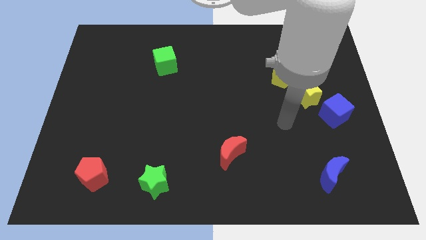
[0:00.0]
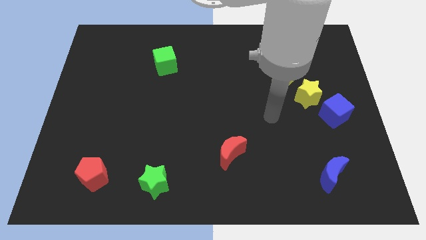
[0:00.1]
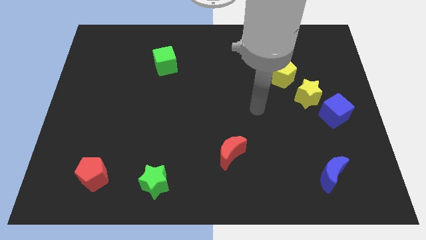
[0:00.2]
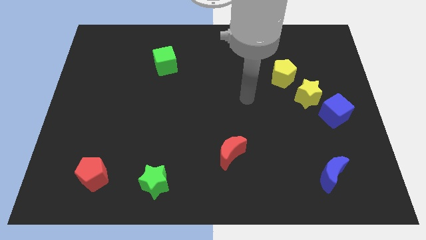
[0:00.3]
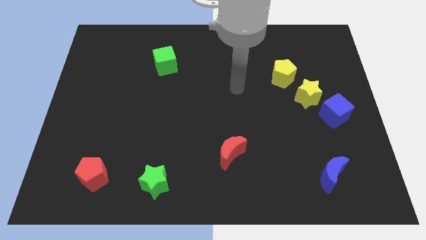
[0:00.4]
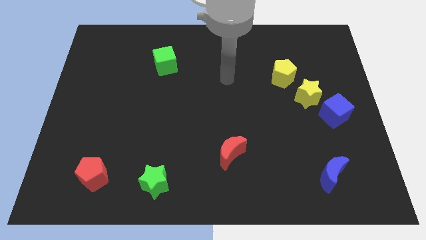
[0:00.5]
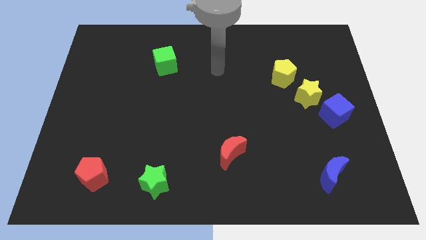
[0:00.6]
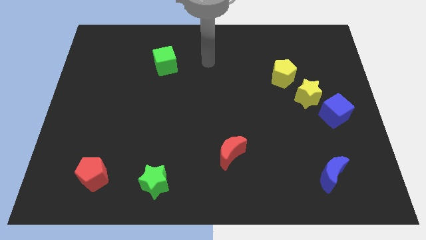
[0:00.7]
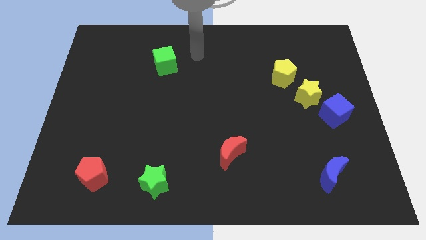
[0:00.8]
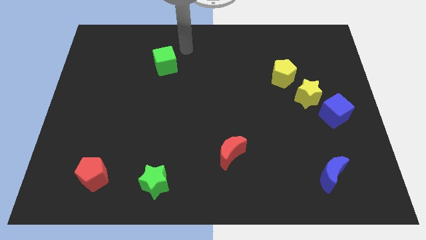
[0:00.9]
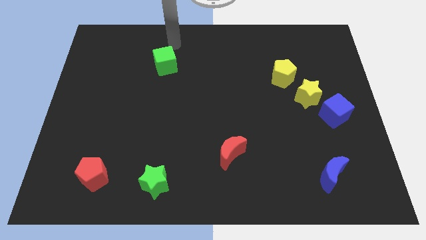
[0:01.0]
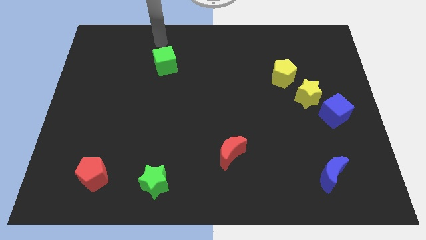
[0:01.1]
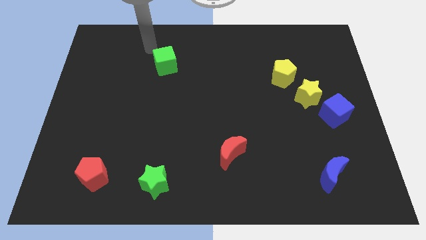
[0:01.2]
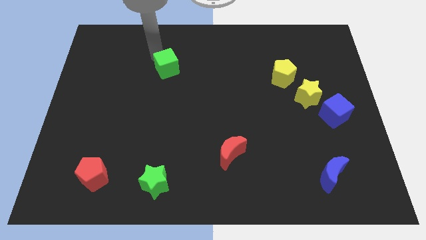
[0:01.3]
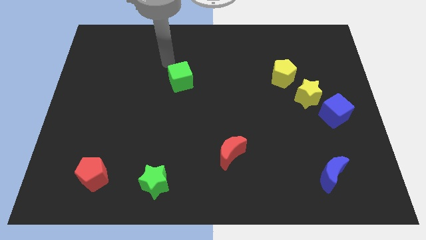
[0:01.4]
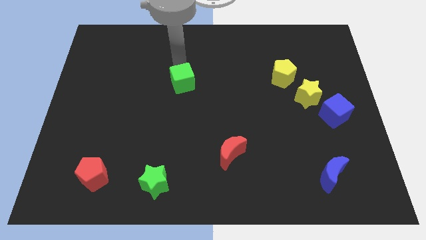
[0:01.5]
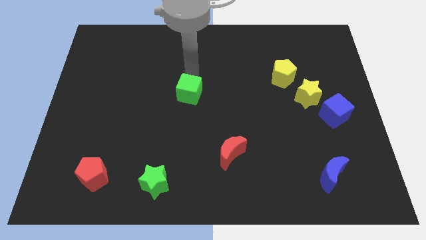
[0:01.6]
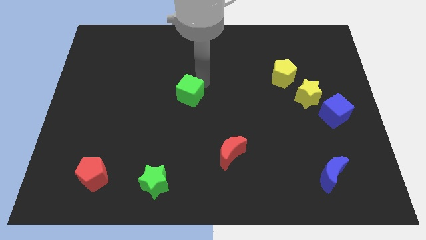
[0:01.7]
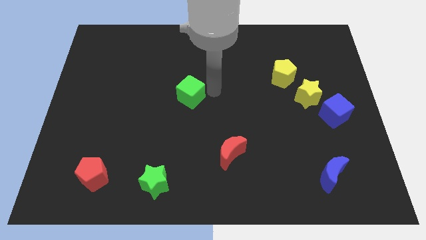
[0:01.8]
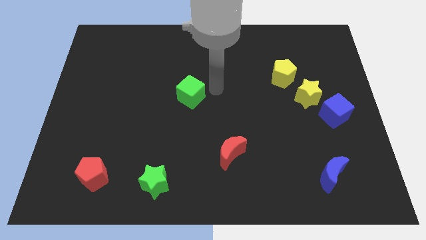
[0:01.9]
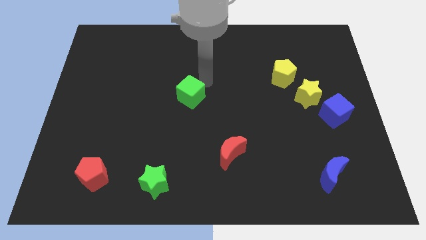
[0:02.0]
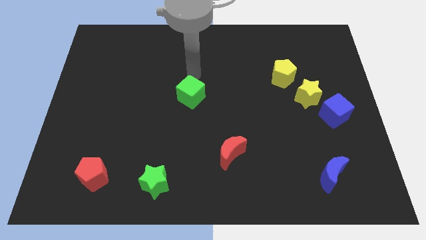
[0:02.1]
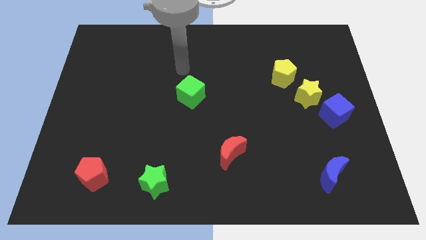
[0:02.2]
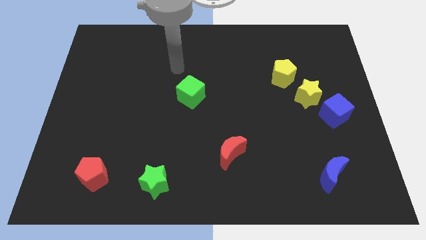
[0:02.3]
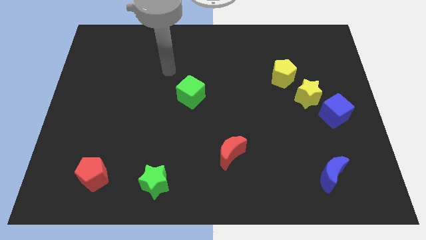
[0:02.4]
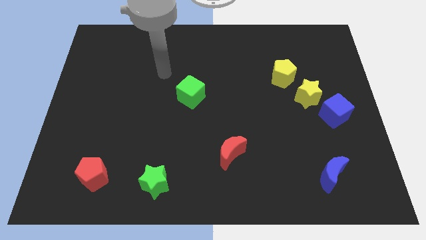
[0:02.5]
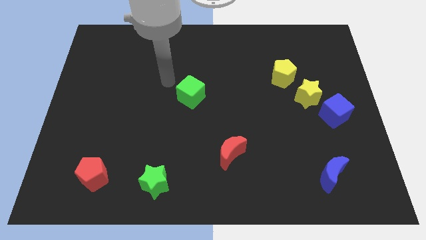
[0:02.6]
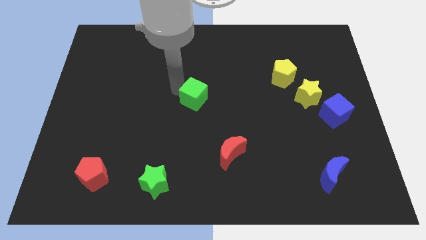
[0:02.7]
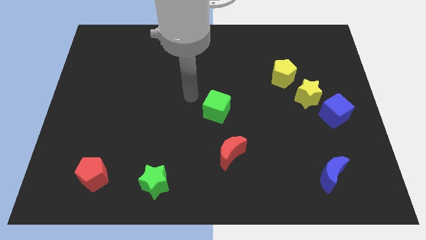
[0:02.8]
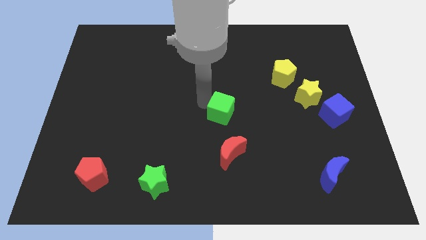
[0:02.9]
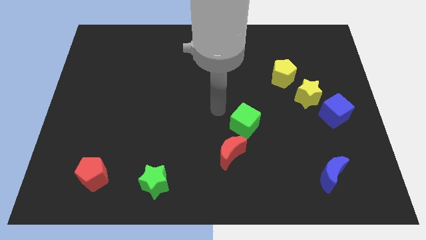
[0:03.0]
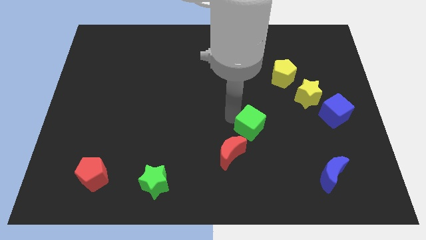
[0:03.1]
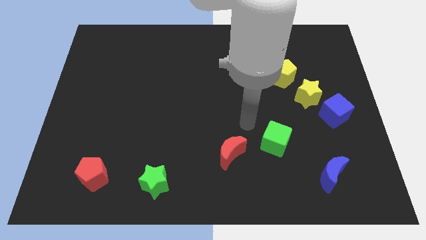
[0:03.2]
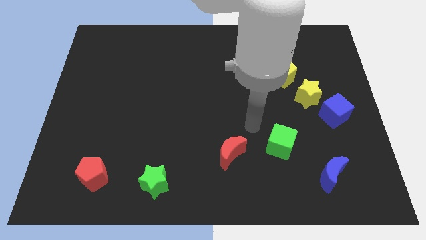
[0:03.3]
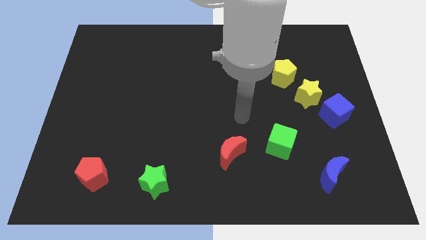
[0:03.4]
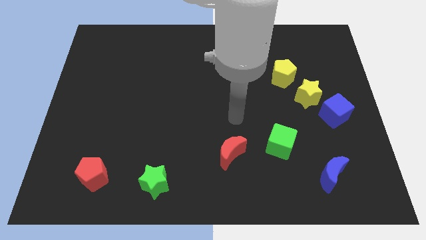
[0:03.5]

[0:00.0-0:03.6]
move the green cube to the right side of the red moon

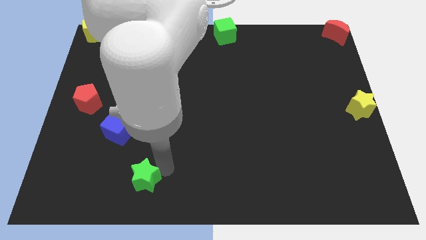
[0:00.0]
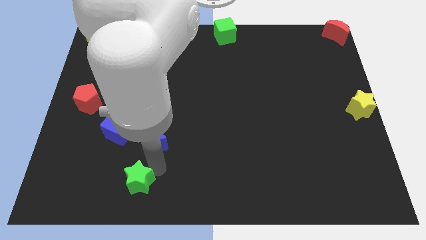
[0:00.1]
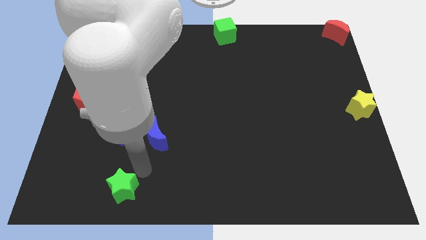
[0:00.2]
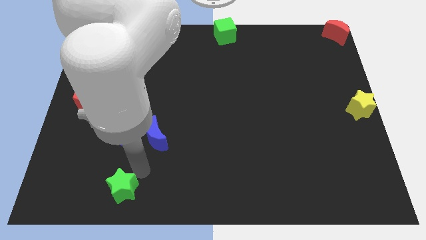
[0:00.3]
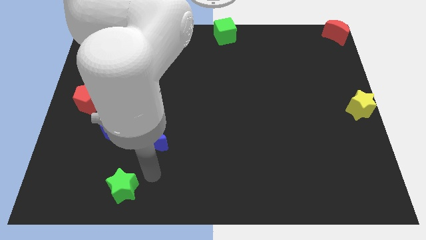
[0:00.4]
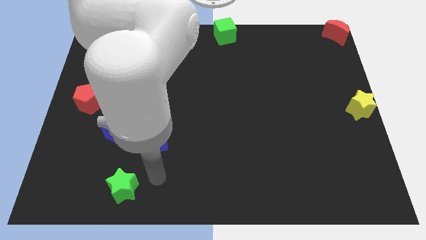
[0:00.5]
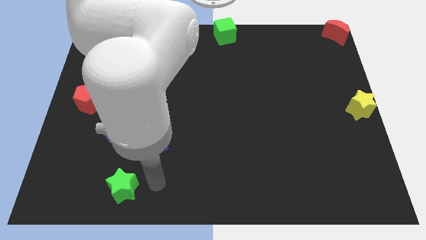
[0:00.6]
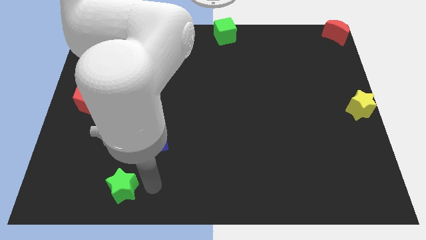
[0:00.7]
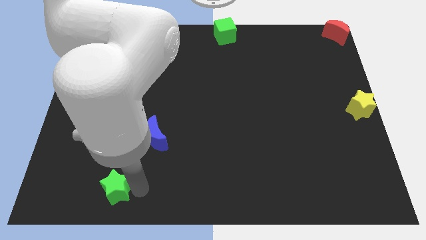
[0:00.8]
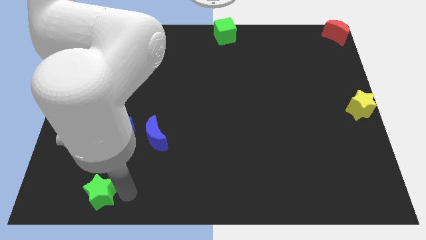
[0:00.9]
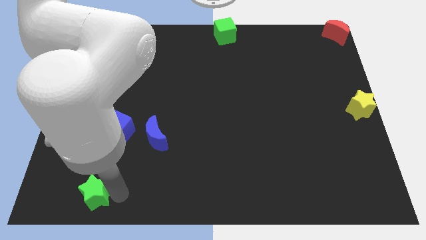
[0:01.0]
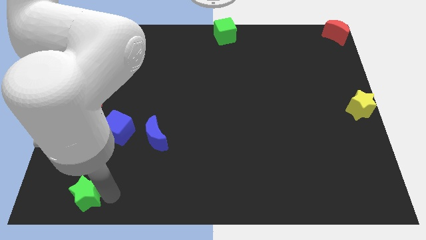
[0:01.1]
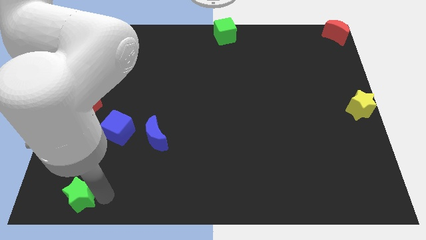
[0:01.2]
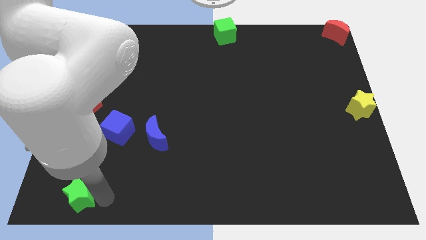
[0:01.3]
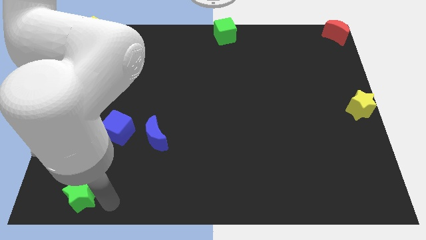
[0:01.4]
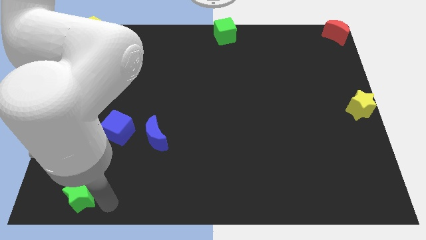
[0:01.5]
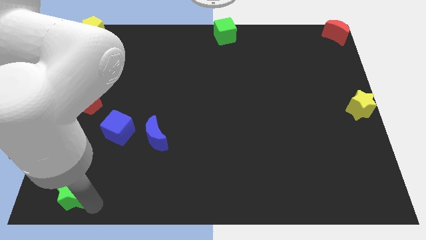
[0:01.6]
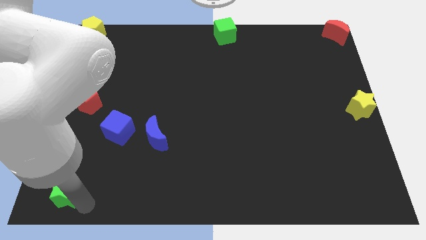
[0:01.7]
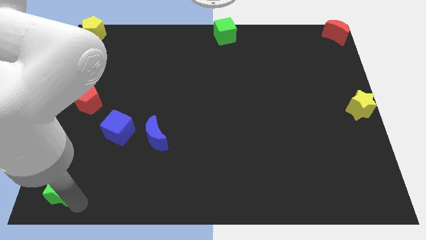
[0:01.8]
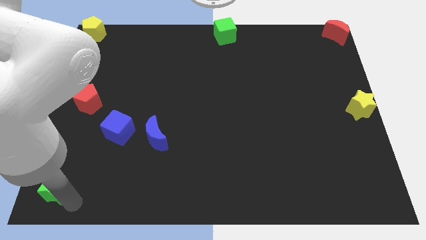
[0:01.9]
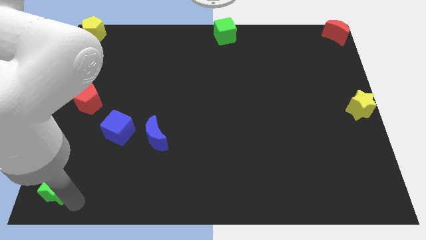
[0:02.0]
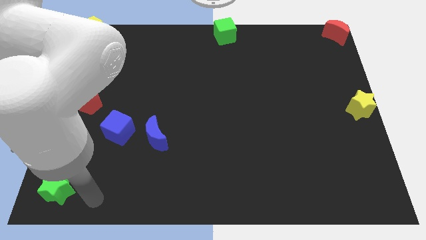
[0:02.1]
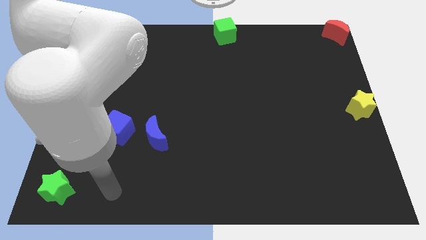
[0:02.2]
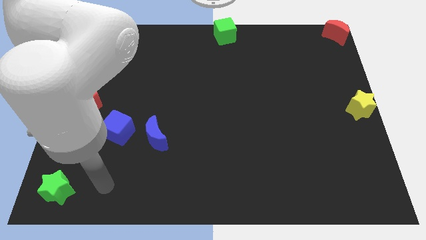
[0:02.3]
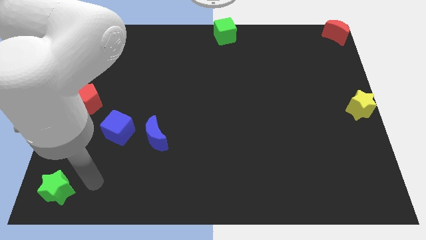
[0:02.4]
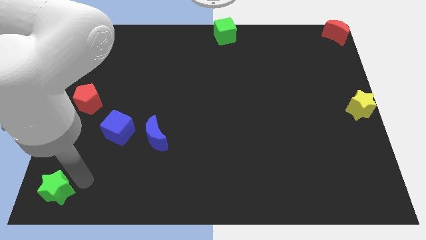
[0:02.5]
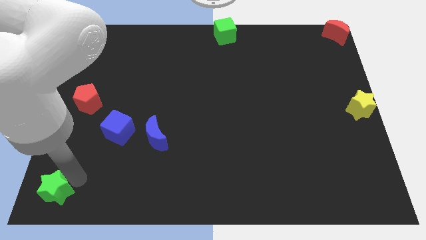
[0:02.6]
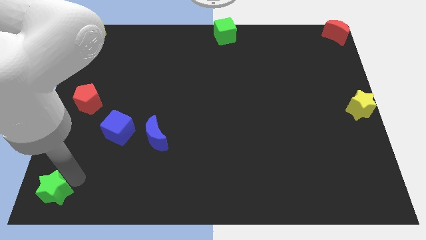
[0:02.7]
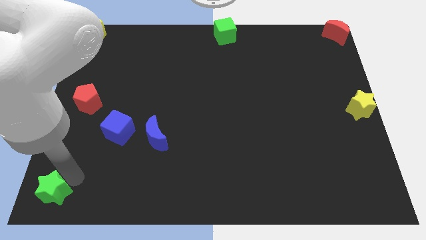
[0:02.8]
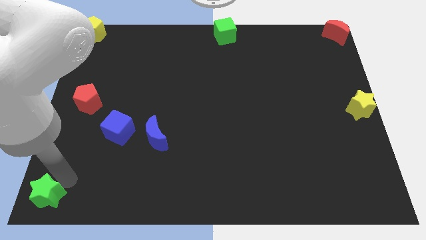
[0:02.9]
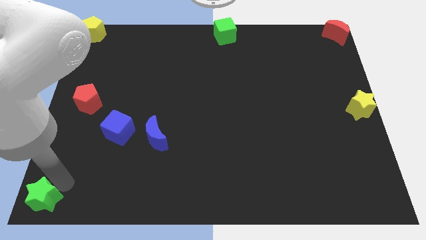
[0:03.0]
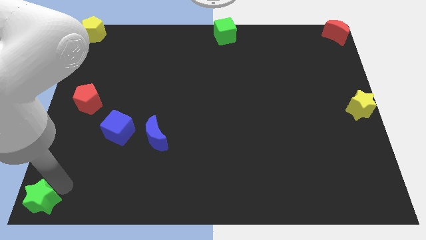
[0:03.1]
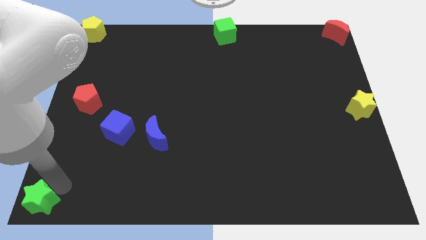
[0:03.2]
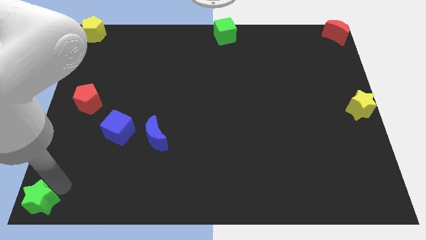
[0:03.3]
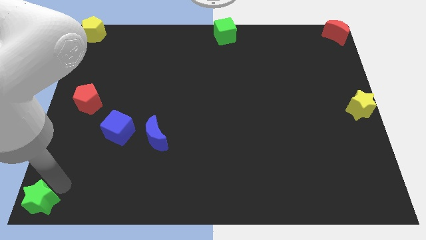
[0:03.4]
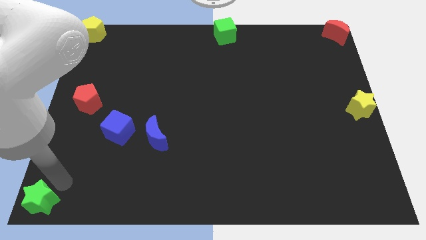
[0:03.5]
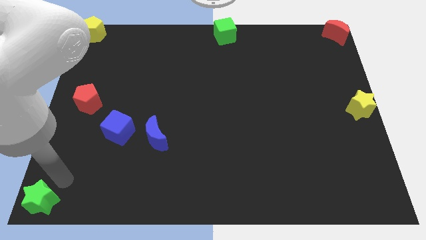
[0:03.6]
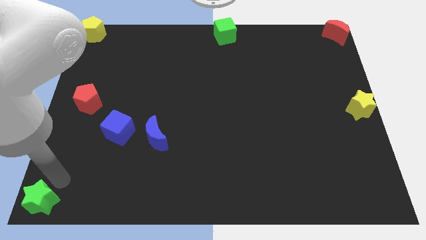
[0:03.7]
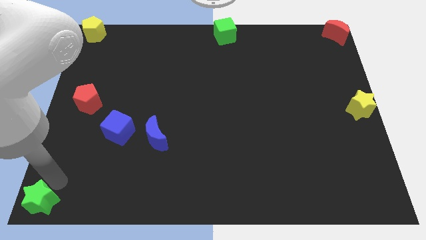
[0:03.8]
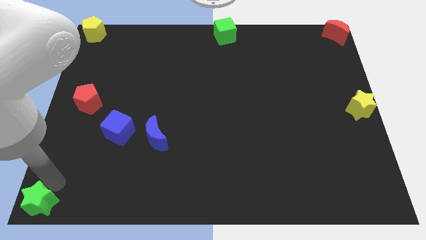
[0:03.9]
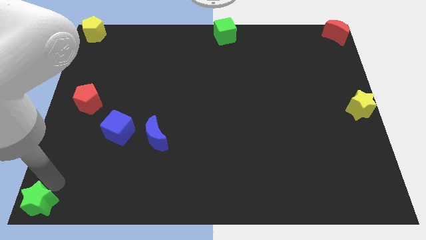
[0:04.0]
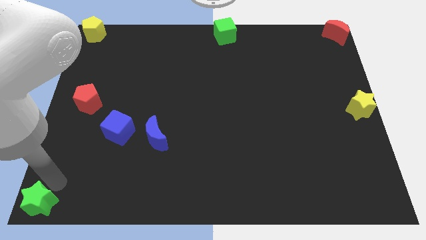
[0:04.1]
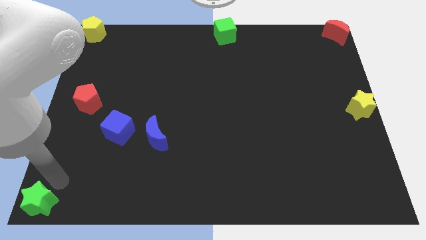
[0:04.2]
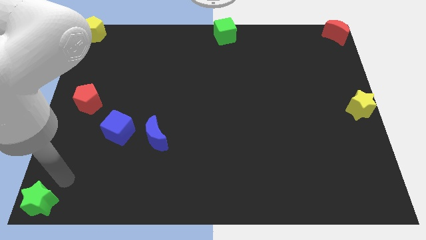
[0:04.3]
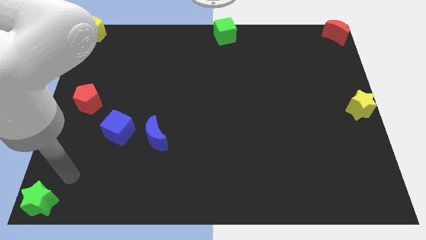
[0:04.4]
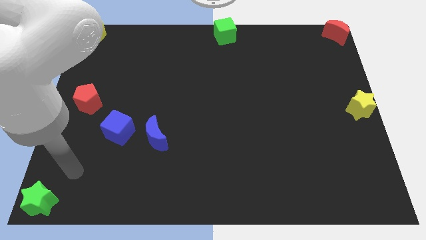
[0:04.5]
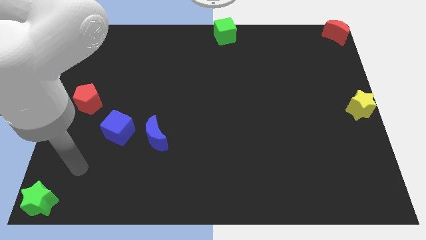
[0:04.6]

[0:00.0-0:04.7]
push green star to the bottom left corner

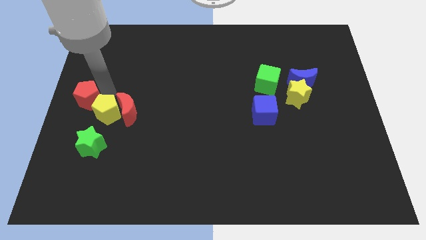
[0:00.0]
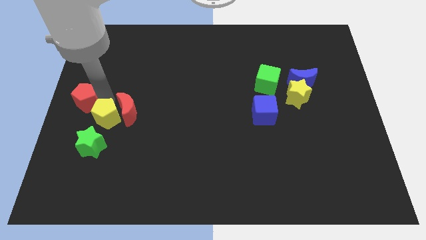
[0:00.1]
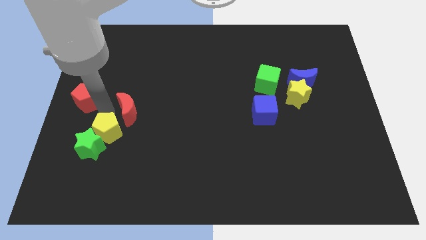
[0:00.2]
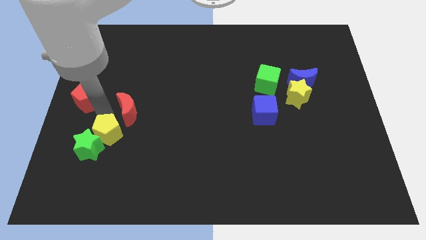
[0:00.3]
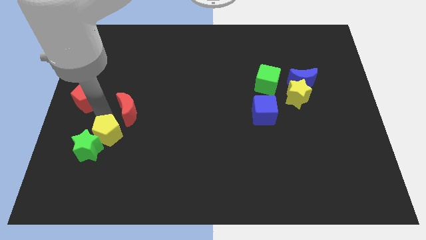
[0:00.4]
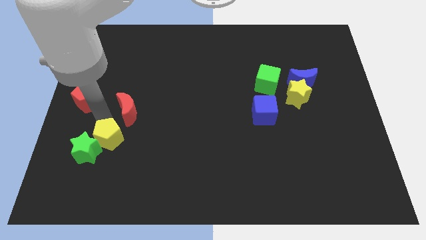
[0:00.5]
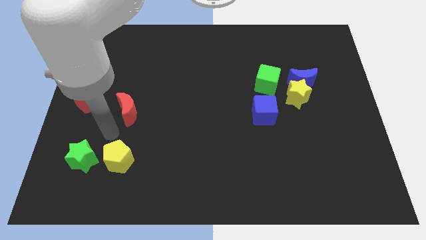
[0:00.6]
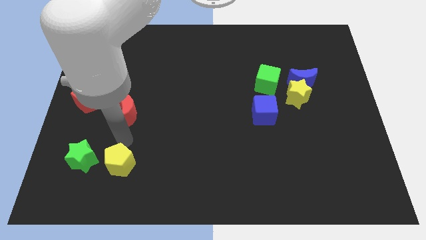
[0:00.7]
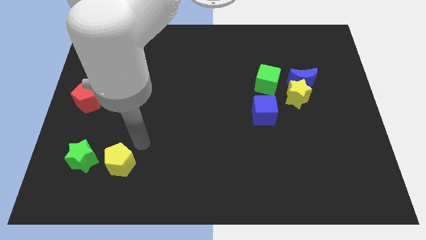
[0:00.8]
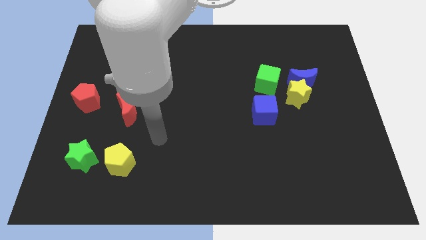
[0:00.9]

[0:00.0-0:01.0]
push the yellow pentagon into the green star
